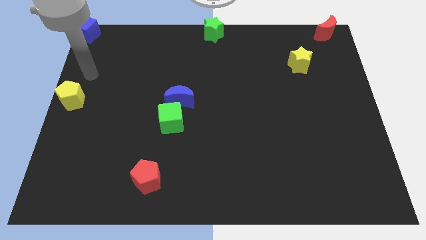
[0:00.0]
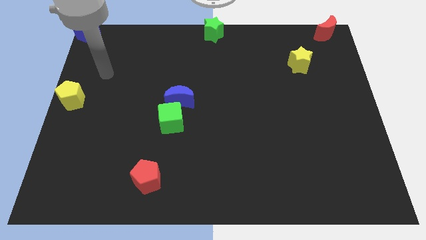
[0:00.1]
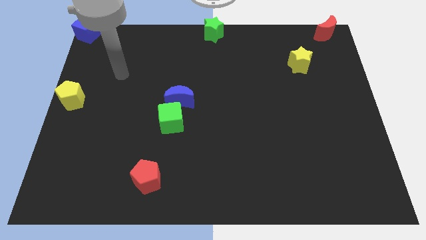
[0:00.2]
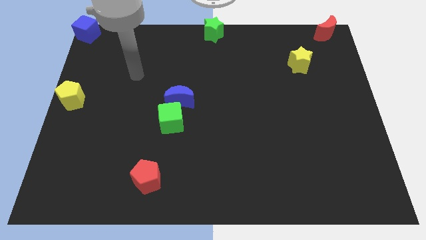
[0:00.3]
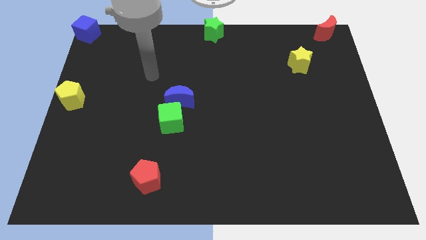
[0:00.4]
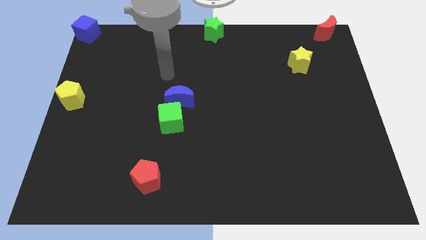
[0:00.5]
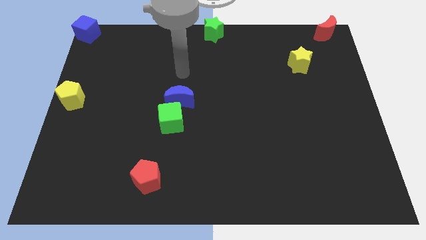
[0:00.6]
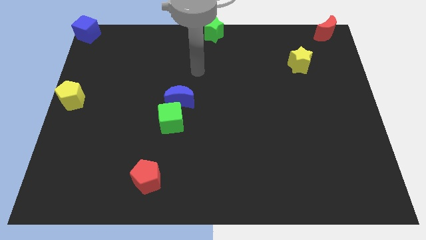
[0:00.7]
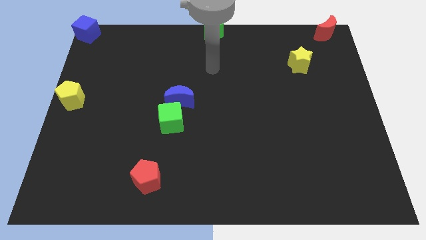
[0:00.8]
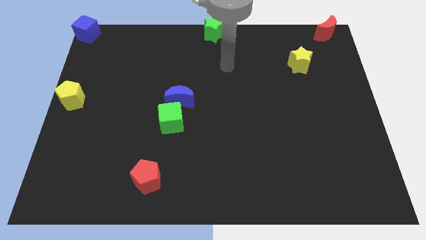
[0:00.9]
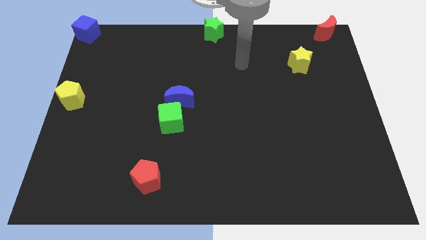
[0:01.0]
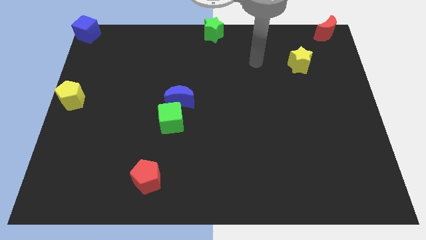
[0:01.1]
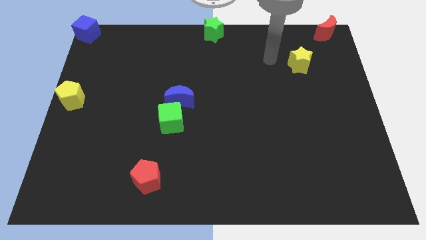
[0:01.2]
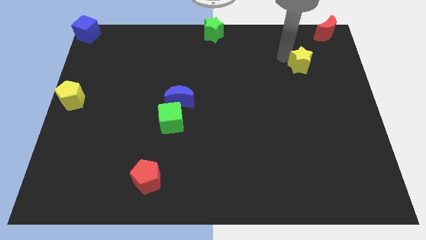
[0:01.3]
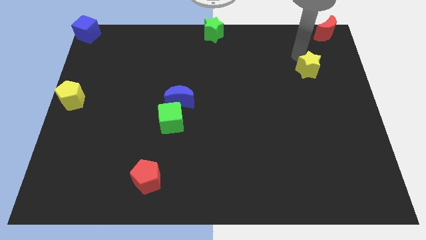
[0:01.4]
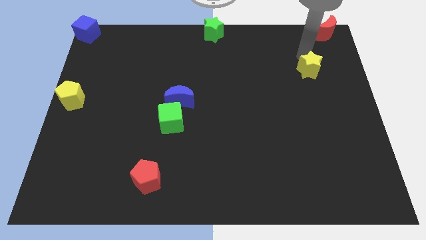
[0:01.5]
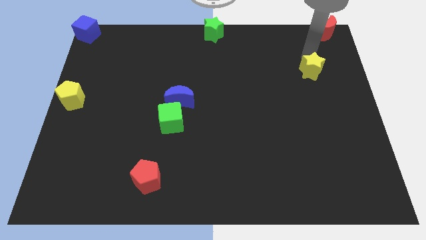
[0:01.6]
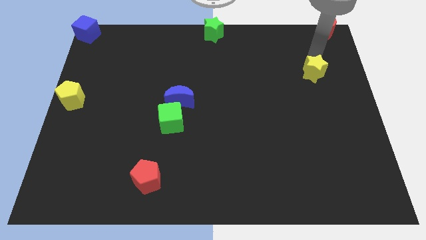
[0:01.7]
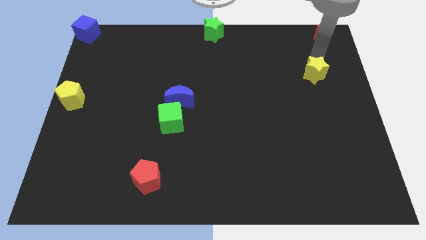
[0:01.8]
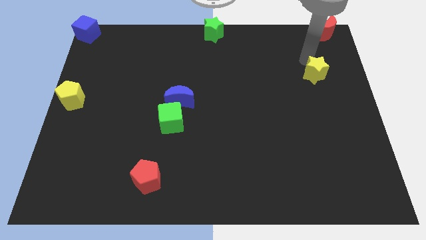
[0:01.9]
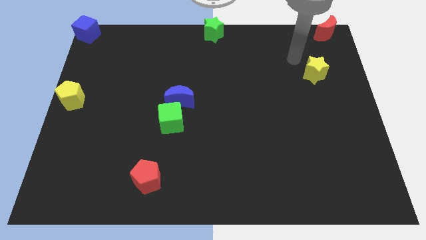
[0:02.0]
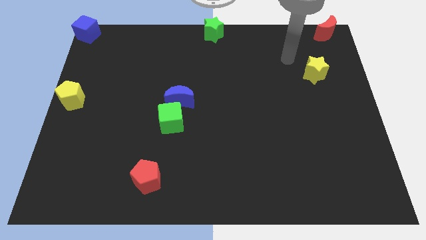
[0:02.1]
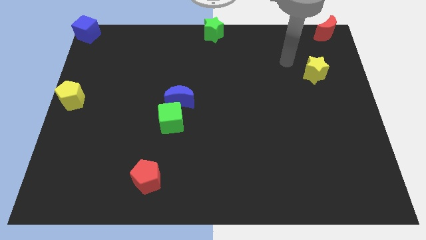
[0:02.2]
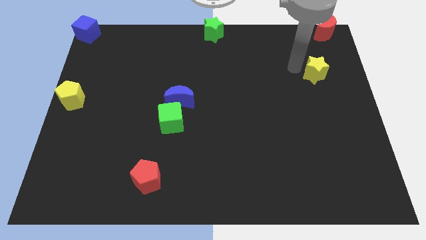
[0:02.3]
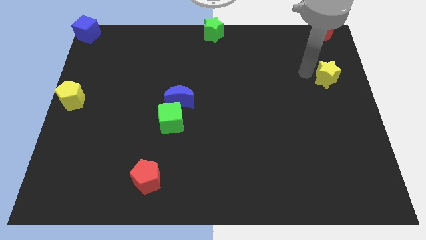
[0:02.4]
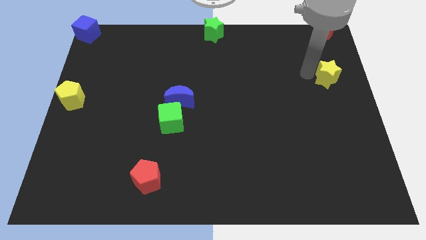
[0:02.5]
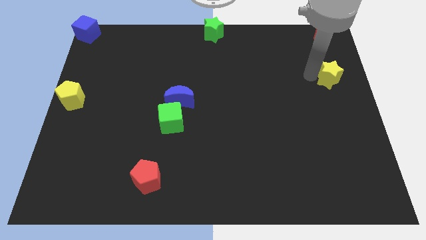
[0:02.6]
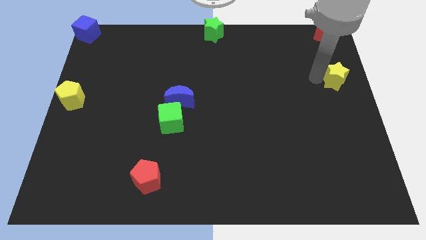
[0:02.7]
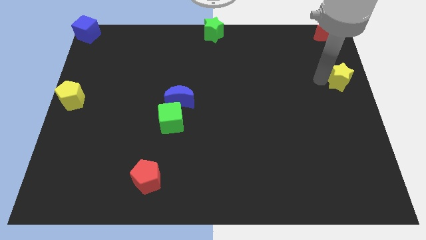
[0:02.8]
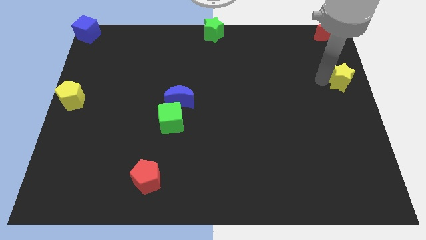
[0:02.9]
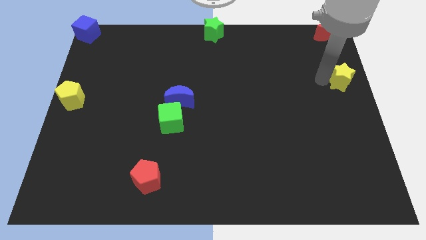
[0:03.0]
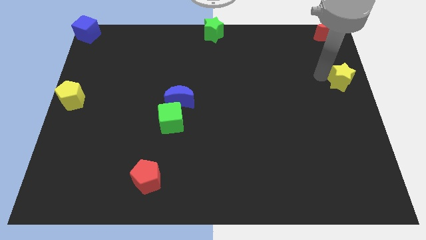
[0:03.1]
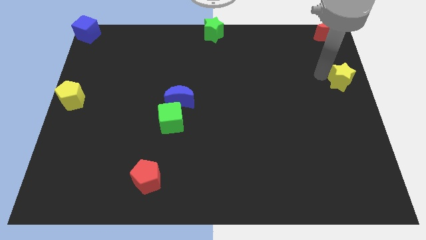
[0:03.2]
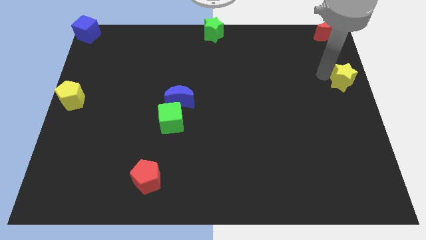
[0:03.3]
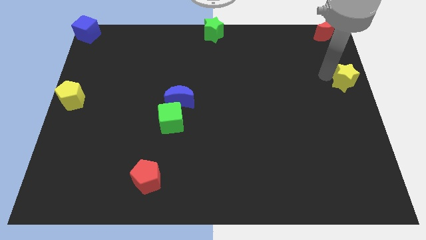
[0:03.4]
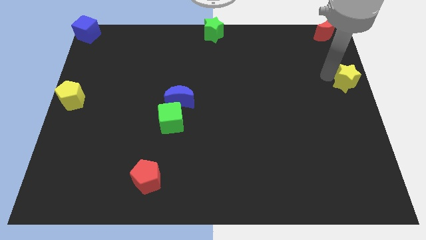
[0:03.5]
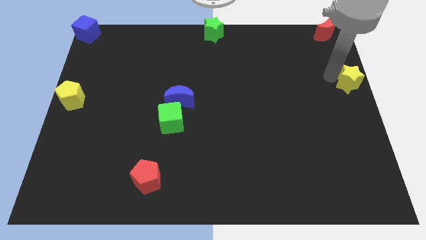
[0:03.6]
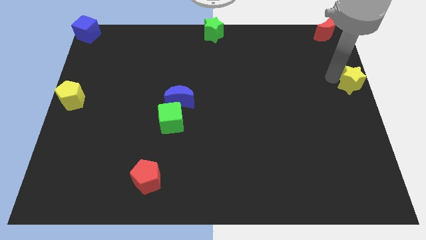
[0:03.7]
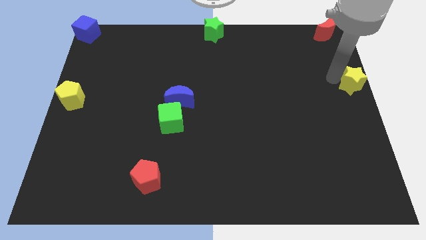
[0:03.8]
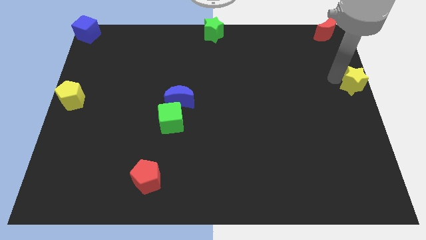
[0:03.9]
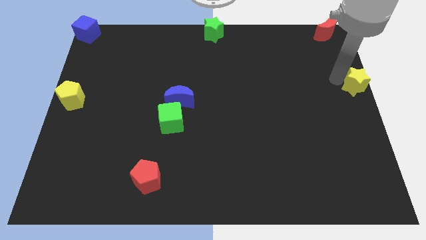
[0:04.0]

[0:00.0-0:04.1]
push the yellow star diagonally on the bottom right side of the red crescent

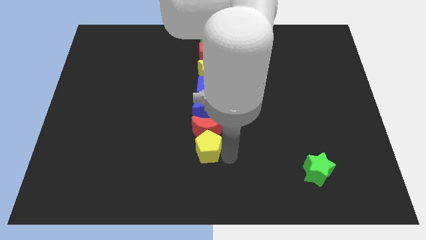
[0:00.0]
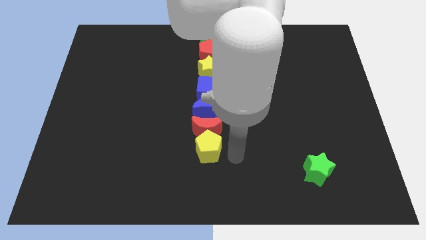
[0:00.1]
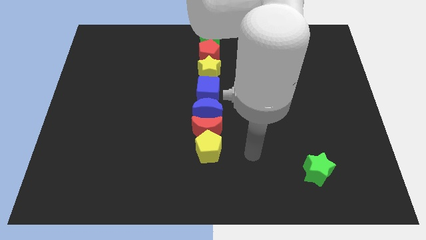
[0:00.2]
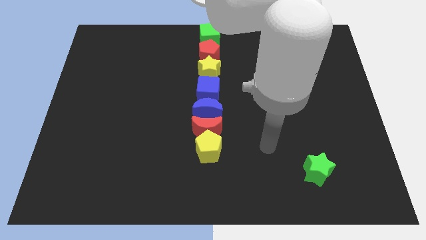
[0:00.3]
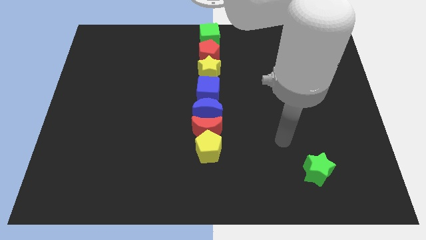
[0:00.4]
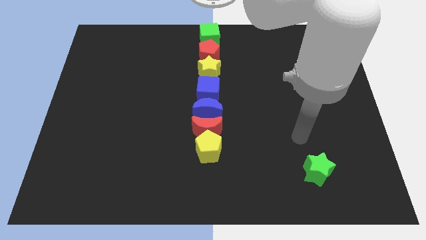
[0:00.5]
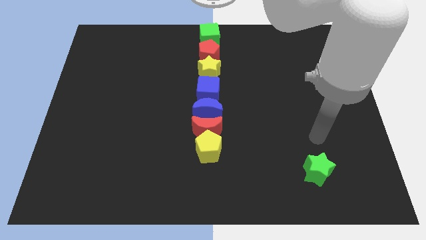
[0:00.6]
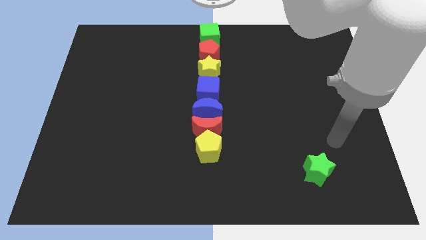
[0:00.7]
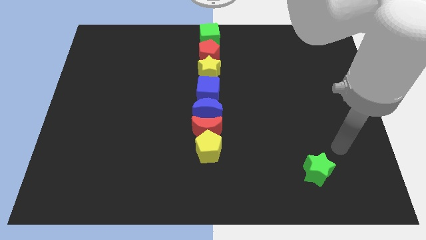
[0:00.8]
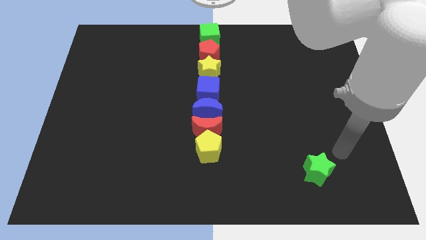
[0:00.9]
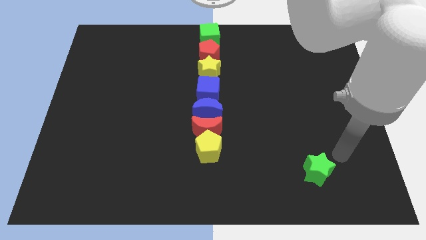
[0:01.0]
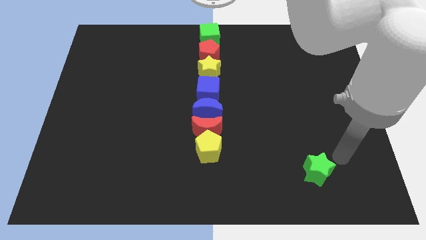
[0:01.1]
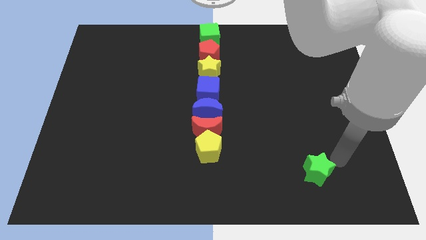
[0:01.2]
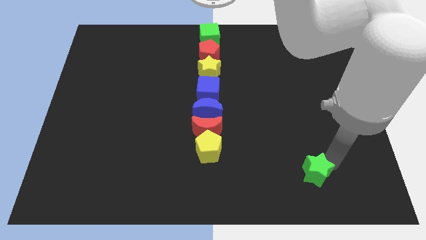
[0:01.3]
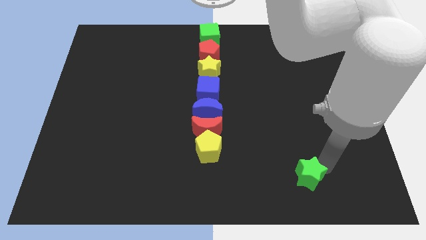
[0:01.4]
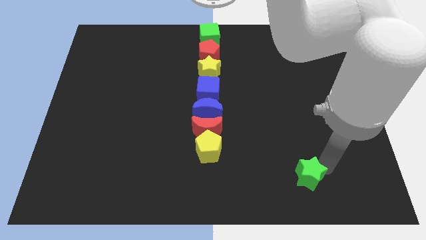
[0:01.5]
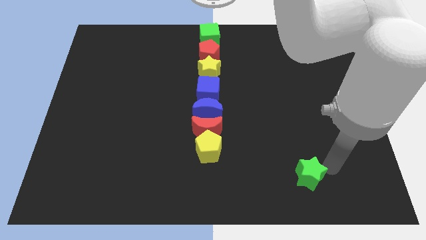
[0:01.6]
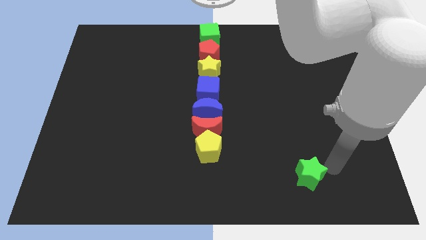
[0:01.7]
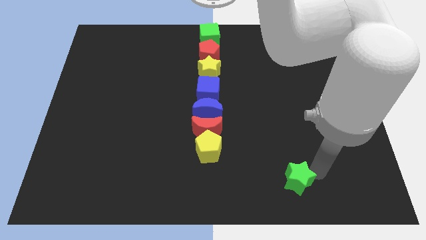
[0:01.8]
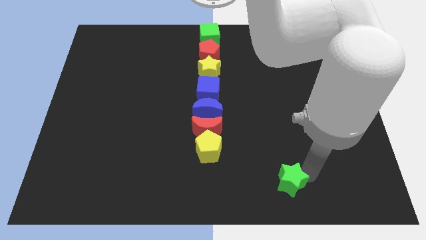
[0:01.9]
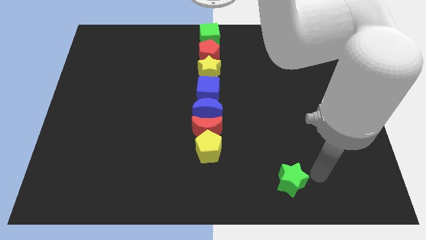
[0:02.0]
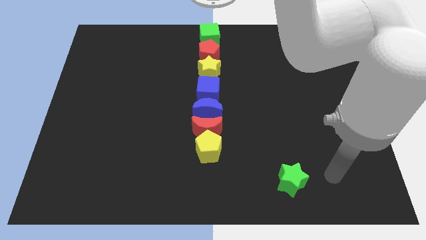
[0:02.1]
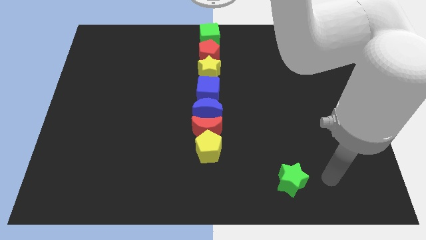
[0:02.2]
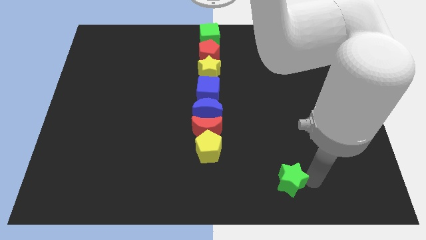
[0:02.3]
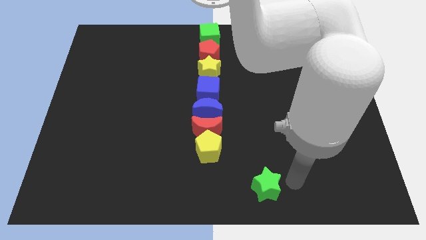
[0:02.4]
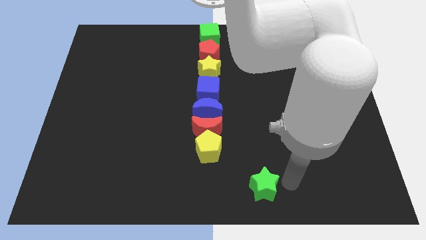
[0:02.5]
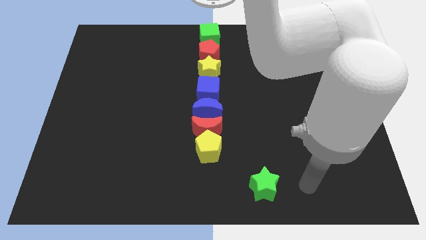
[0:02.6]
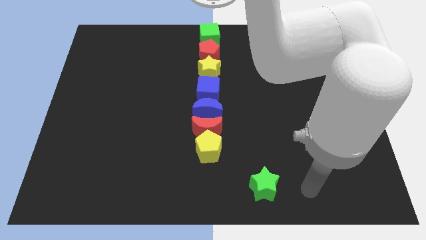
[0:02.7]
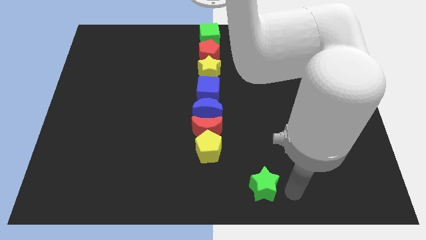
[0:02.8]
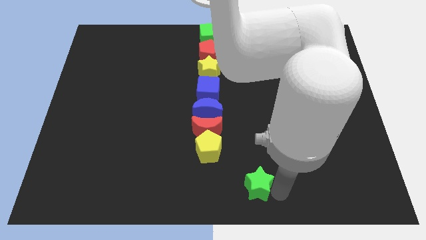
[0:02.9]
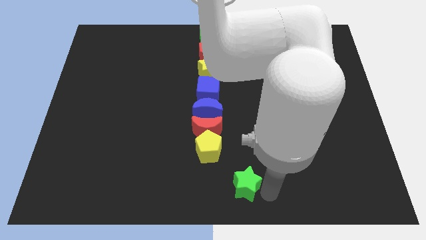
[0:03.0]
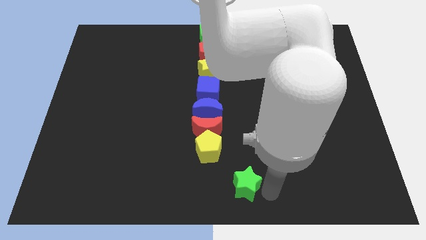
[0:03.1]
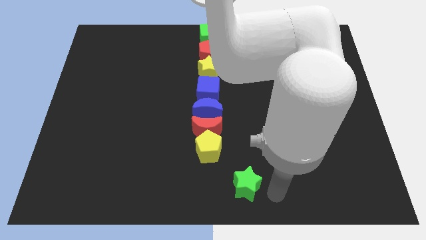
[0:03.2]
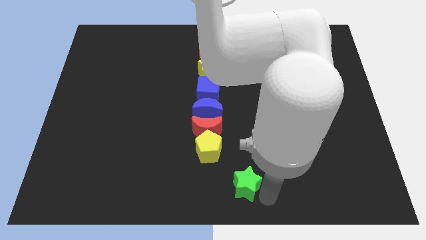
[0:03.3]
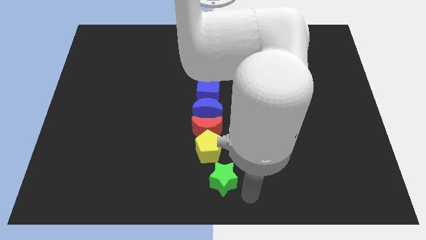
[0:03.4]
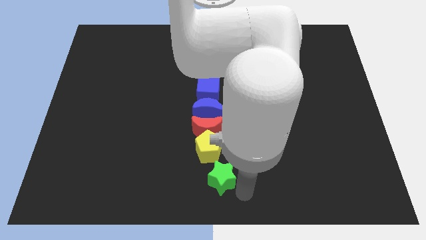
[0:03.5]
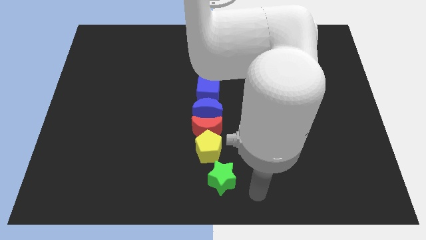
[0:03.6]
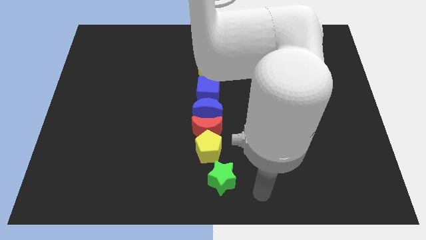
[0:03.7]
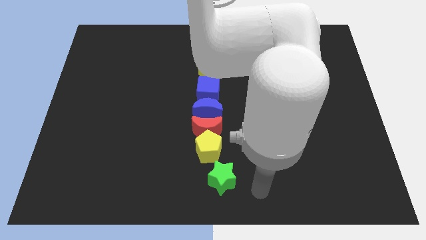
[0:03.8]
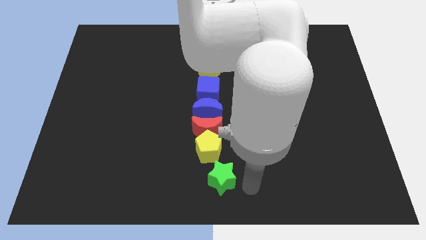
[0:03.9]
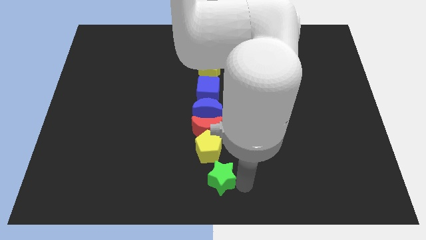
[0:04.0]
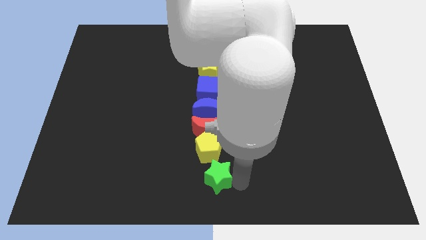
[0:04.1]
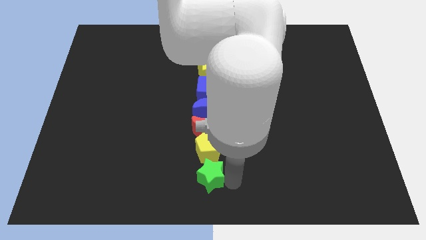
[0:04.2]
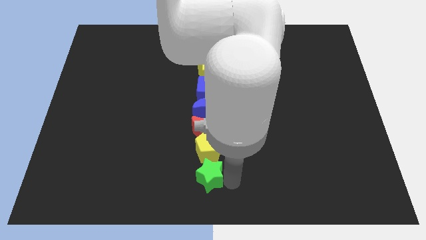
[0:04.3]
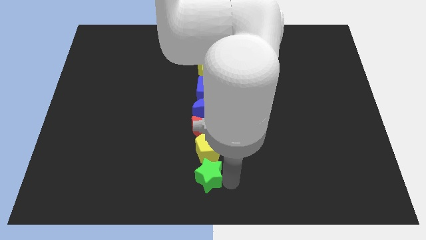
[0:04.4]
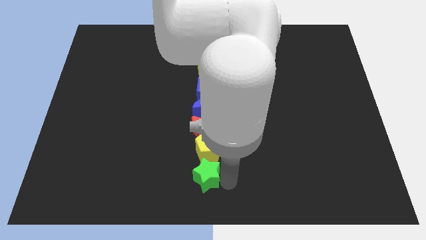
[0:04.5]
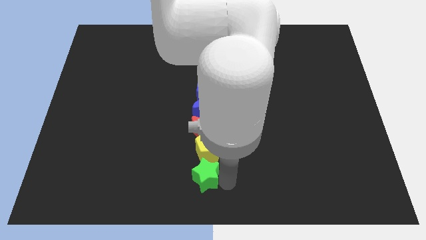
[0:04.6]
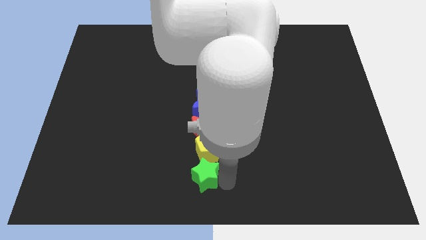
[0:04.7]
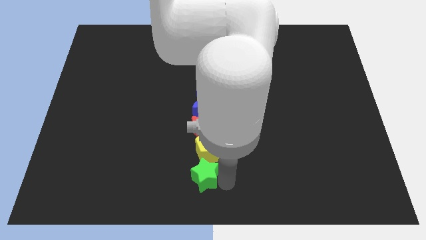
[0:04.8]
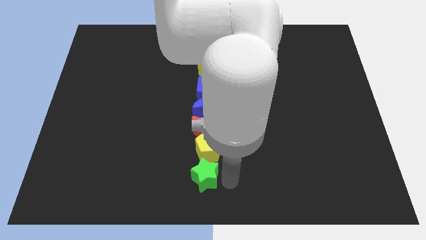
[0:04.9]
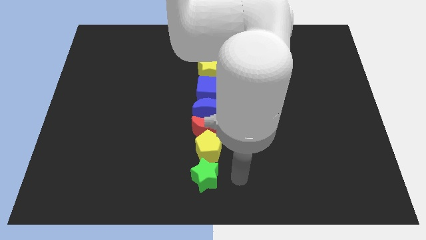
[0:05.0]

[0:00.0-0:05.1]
place the green star below the yellow pentagon
